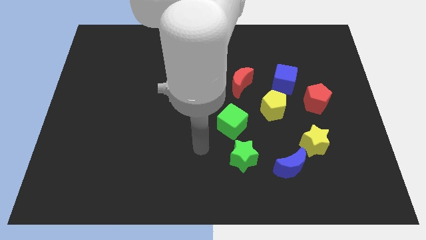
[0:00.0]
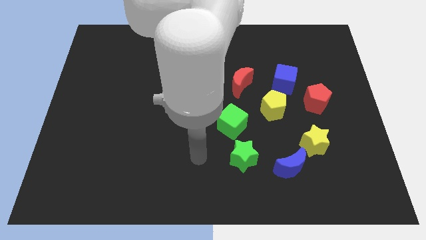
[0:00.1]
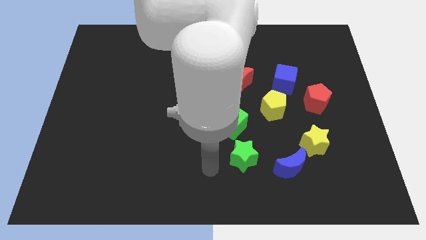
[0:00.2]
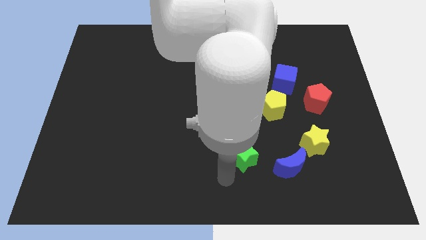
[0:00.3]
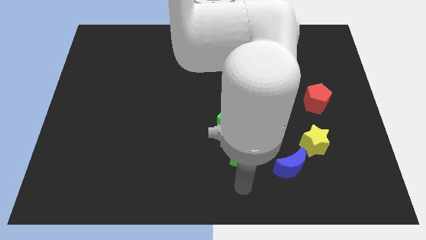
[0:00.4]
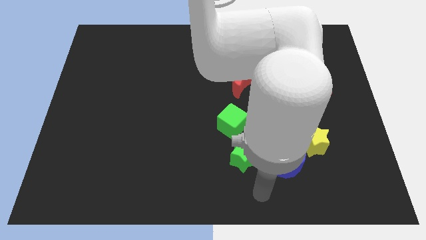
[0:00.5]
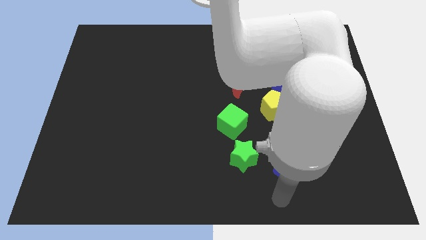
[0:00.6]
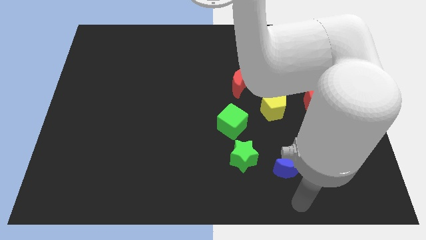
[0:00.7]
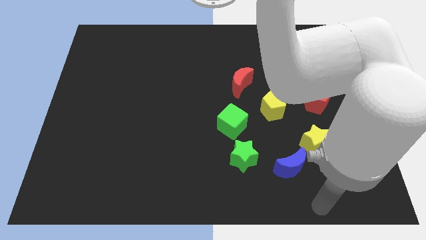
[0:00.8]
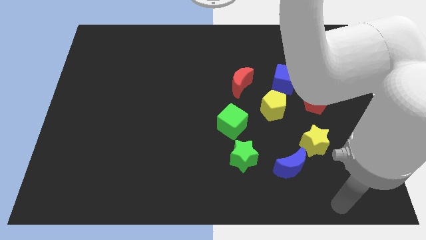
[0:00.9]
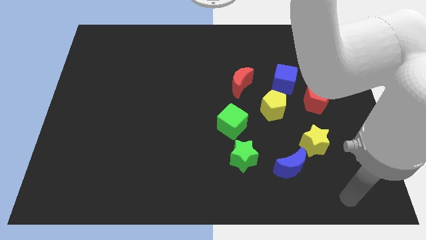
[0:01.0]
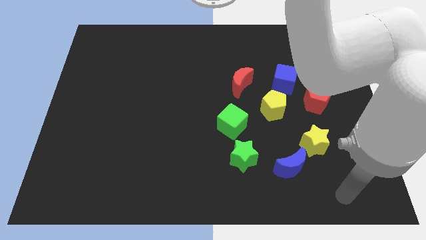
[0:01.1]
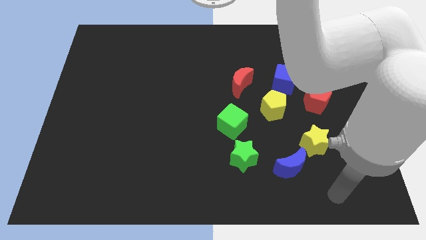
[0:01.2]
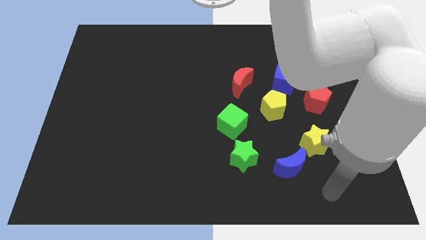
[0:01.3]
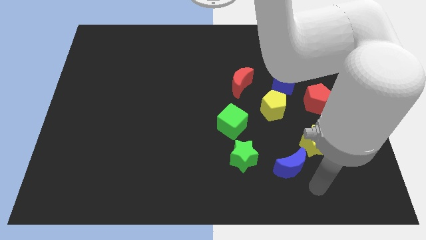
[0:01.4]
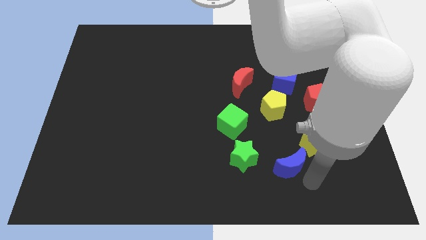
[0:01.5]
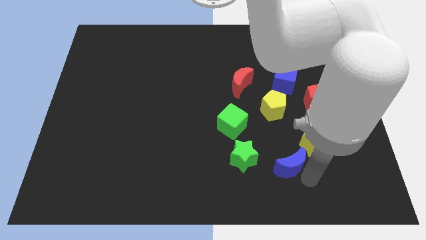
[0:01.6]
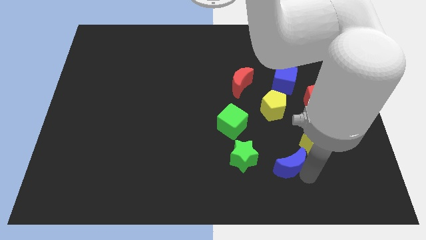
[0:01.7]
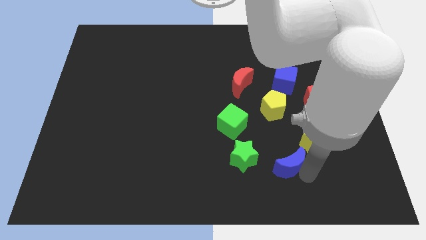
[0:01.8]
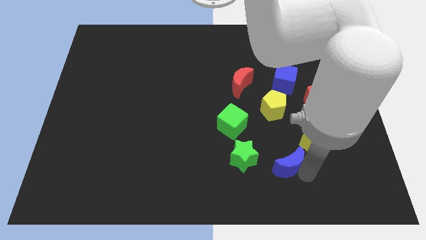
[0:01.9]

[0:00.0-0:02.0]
touch the blue moon

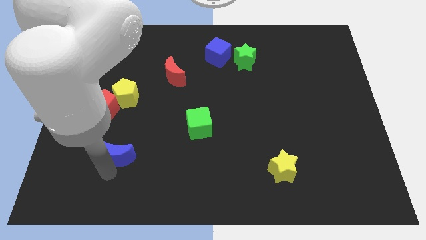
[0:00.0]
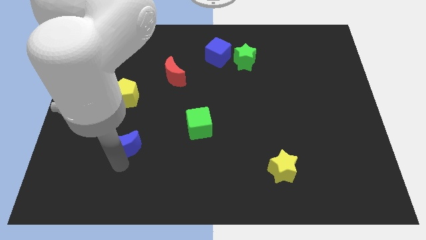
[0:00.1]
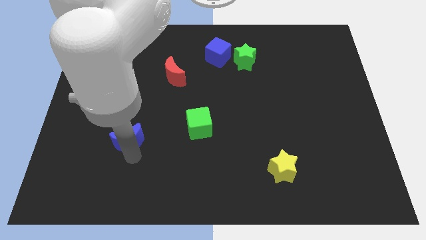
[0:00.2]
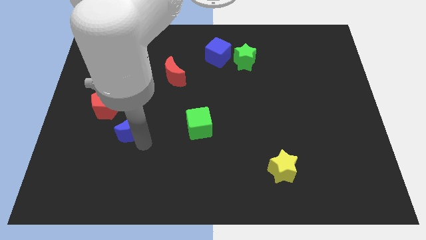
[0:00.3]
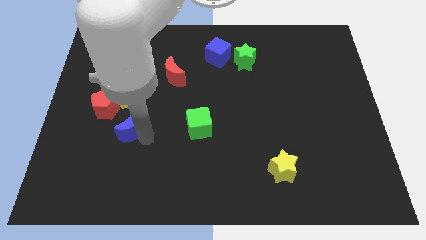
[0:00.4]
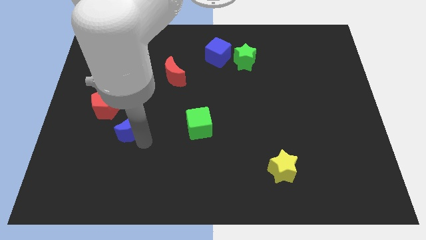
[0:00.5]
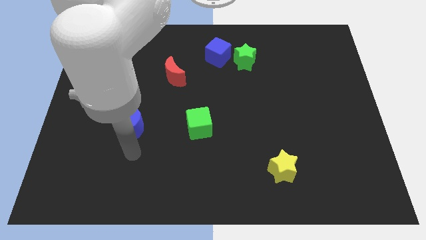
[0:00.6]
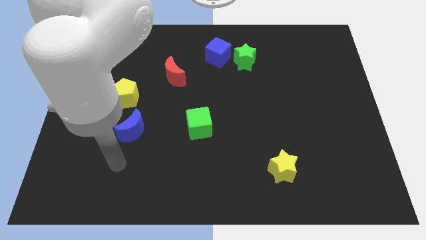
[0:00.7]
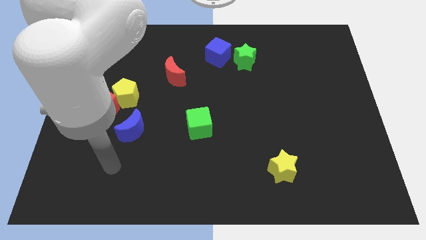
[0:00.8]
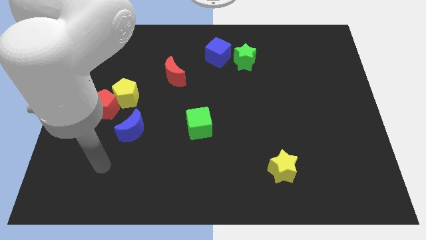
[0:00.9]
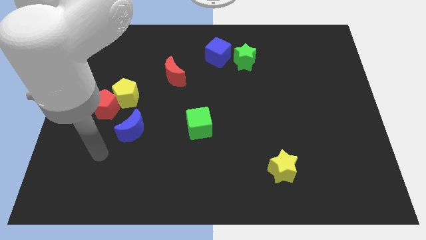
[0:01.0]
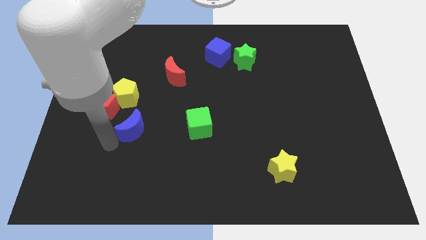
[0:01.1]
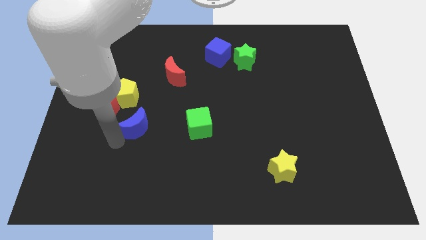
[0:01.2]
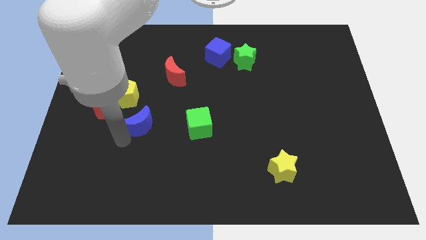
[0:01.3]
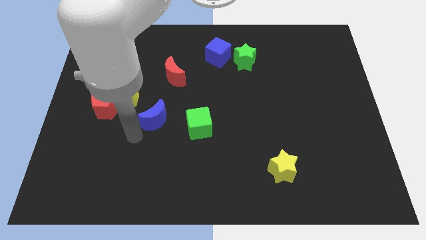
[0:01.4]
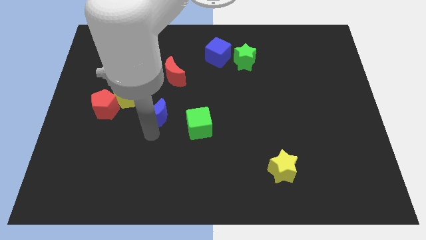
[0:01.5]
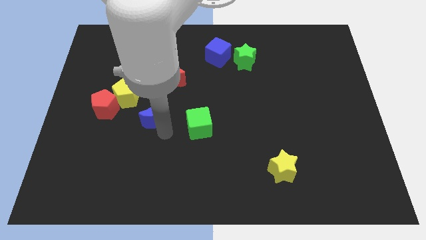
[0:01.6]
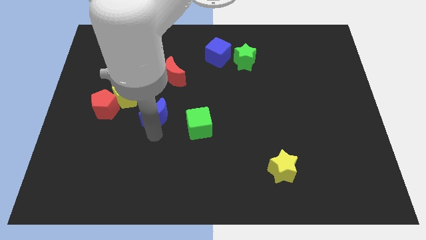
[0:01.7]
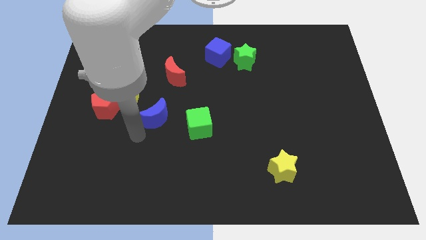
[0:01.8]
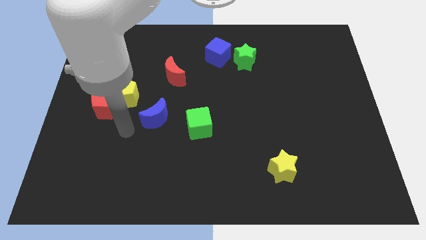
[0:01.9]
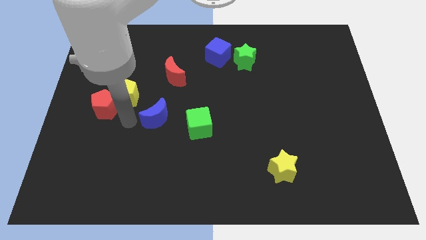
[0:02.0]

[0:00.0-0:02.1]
slide the blue moon to the bottom right of yellow pentagon

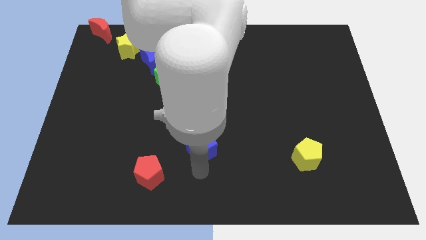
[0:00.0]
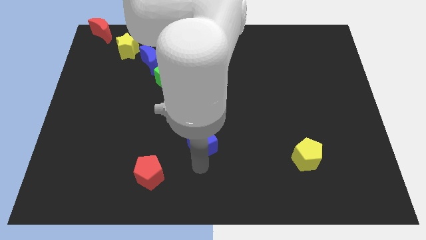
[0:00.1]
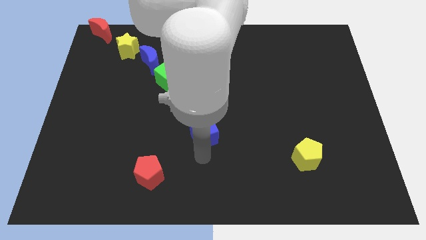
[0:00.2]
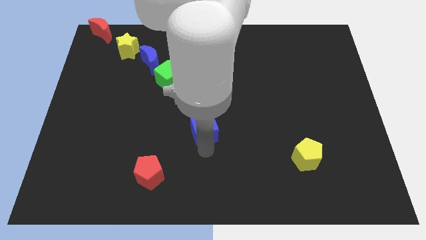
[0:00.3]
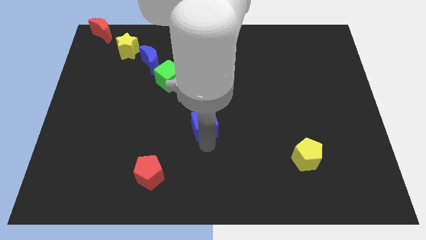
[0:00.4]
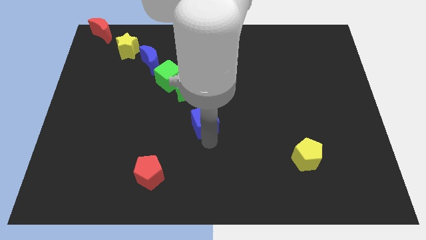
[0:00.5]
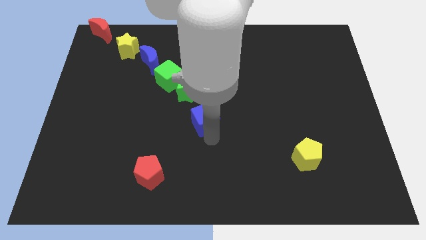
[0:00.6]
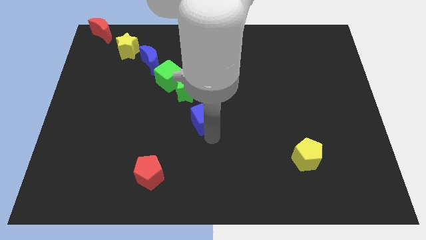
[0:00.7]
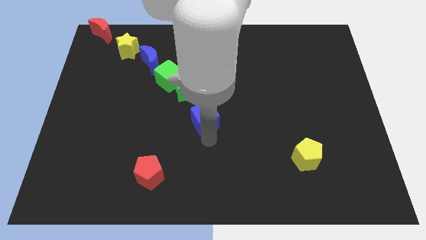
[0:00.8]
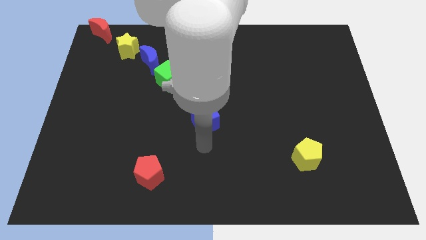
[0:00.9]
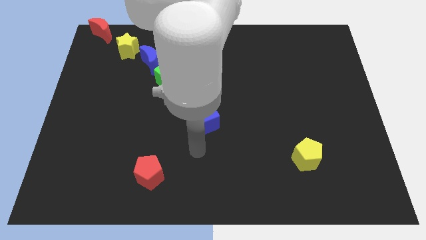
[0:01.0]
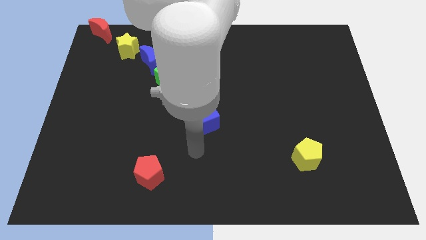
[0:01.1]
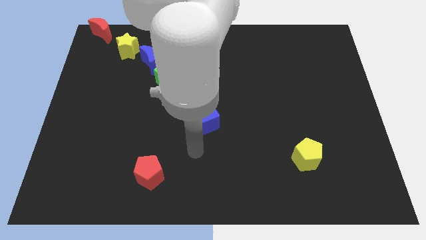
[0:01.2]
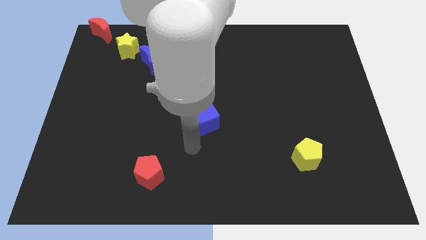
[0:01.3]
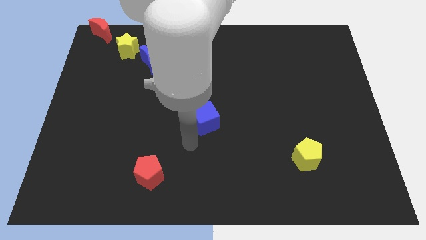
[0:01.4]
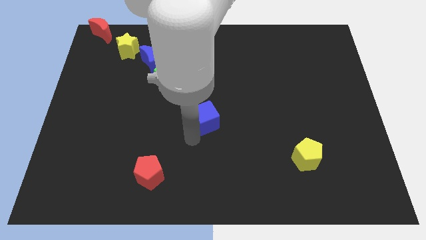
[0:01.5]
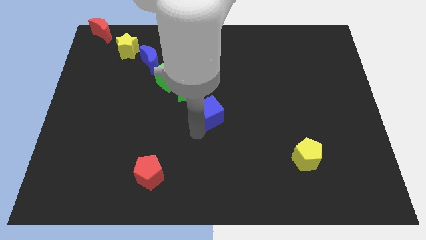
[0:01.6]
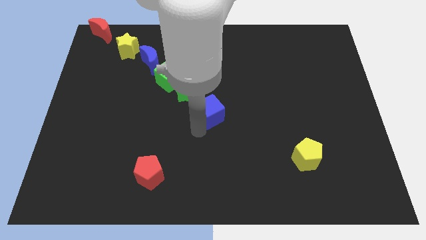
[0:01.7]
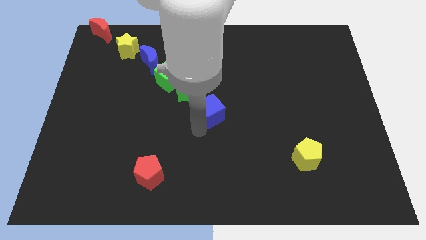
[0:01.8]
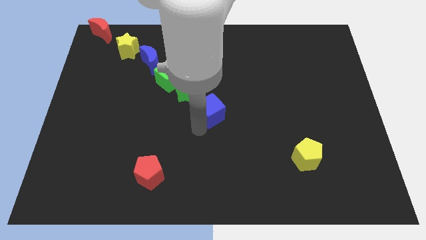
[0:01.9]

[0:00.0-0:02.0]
place blue cube below green star

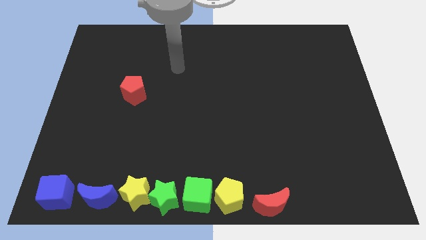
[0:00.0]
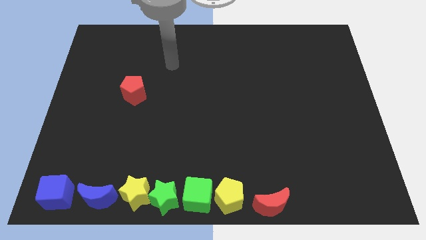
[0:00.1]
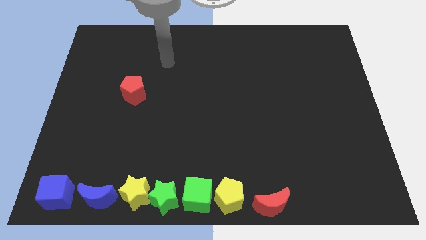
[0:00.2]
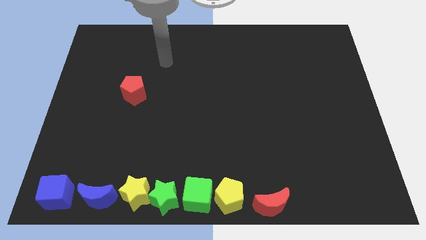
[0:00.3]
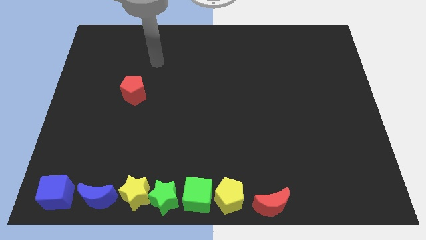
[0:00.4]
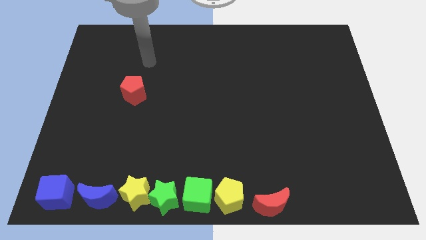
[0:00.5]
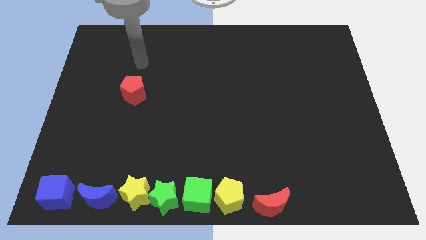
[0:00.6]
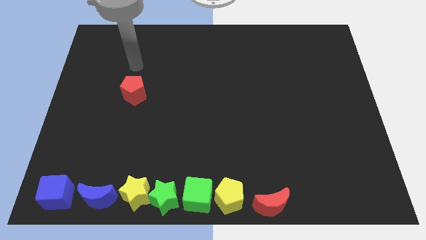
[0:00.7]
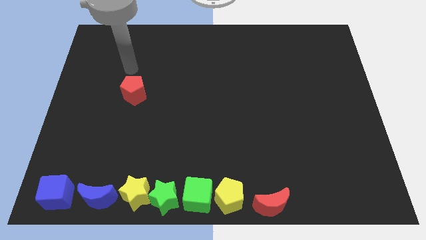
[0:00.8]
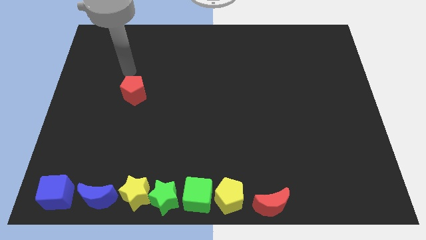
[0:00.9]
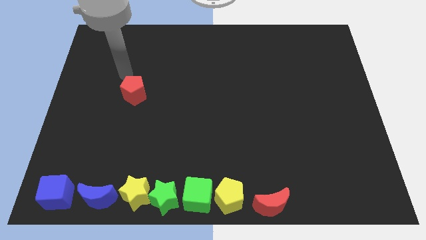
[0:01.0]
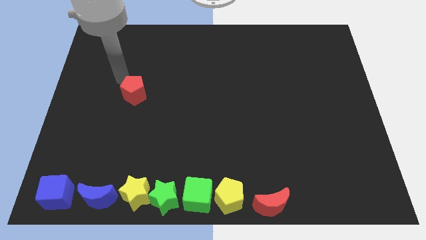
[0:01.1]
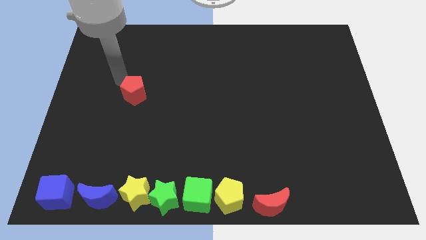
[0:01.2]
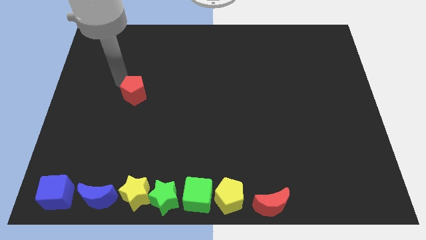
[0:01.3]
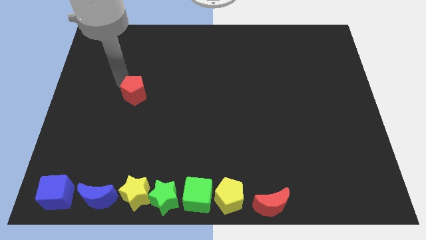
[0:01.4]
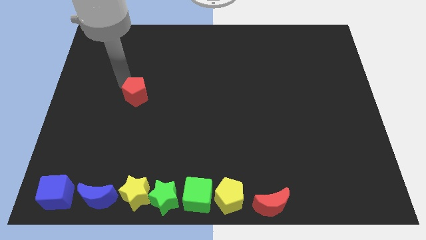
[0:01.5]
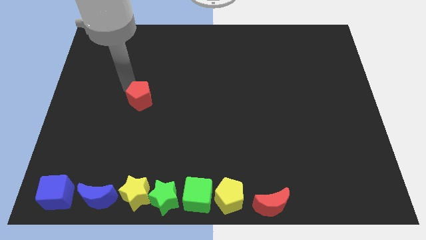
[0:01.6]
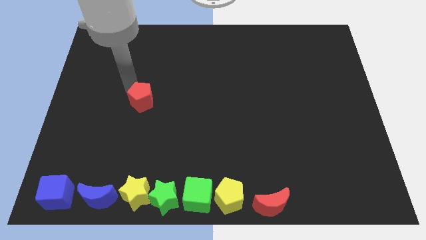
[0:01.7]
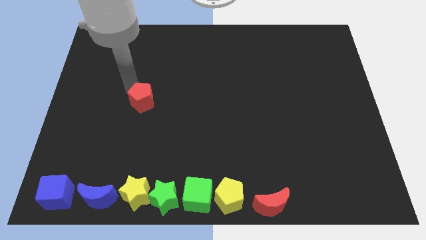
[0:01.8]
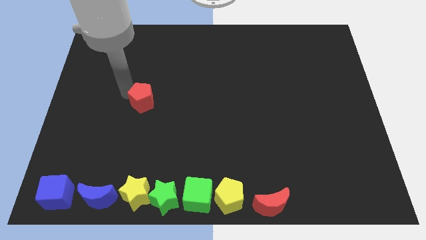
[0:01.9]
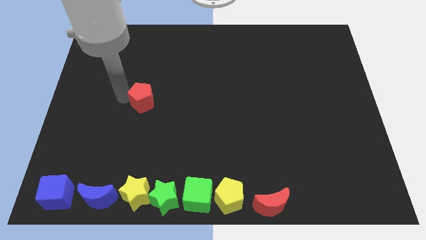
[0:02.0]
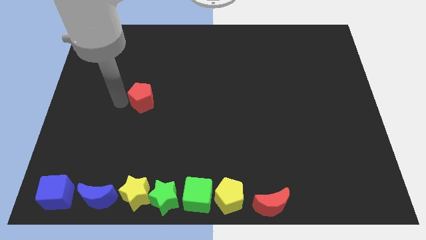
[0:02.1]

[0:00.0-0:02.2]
put red pentagon above yellow star

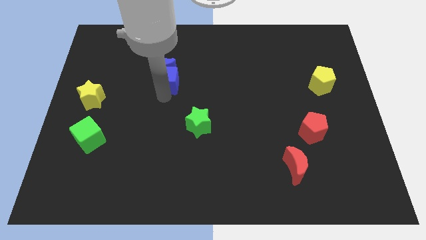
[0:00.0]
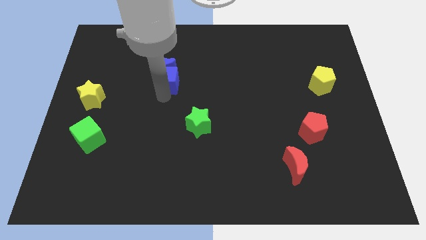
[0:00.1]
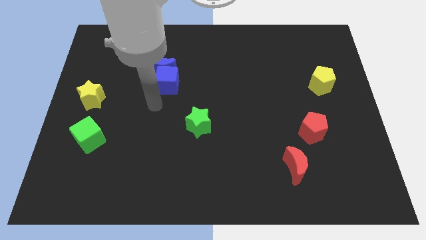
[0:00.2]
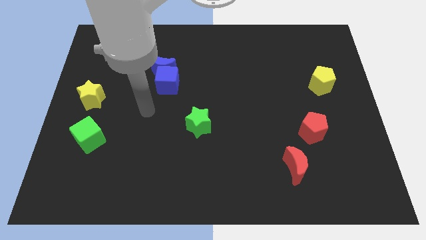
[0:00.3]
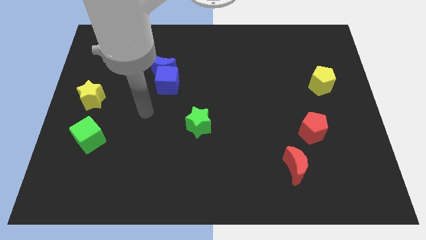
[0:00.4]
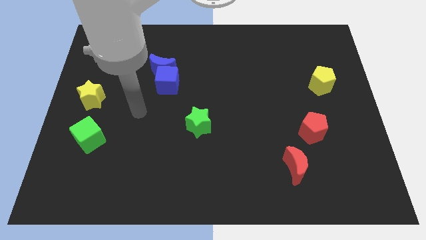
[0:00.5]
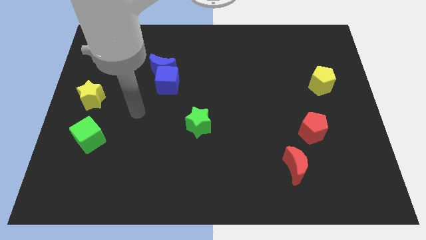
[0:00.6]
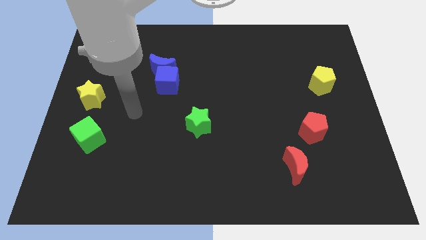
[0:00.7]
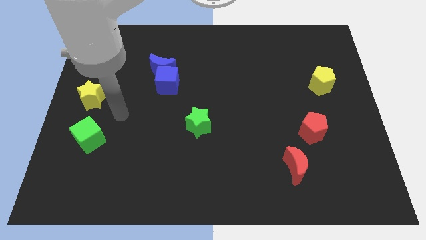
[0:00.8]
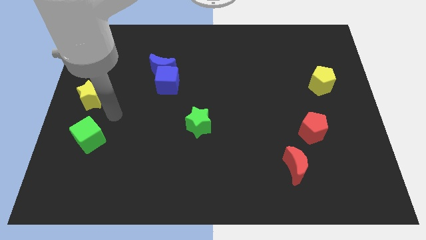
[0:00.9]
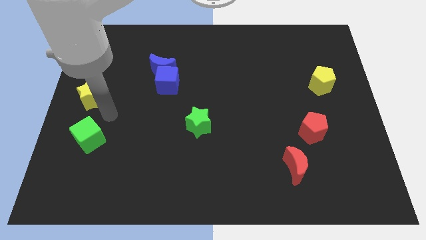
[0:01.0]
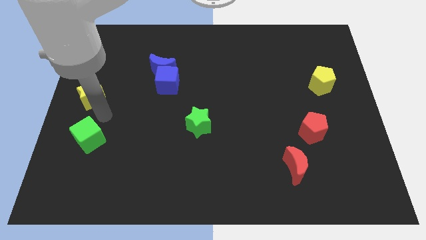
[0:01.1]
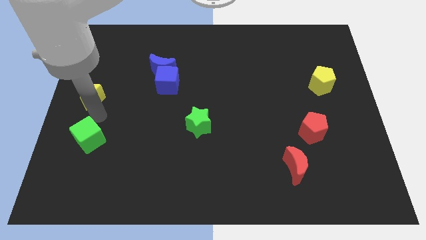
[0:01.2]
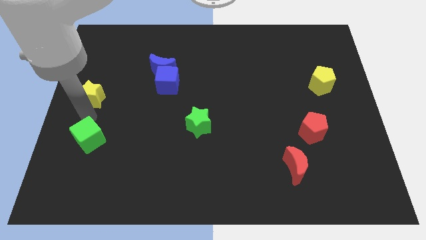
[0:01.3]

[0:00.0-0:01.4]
move your arm away from the blue cube
